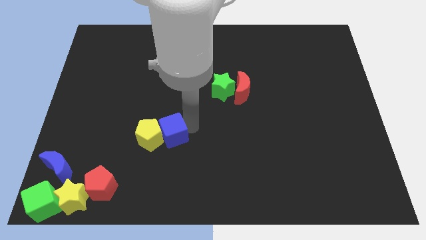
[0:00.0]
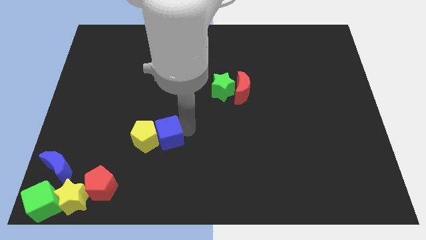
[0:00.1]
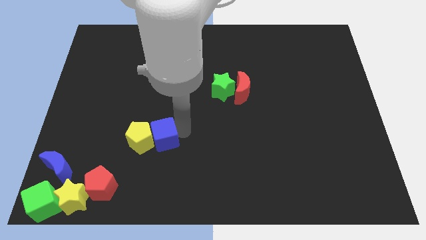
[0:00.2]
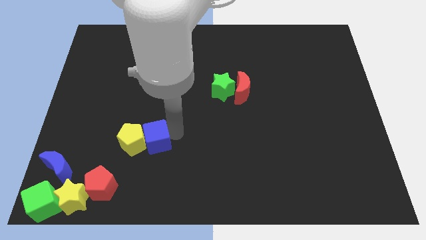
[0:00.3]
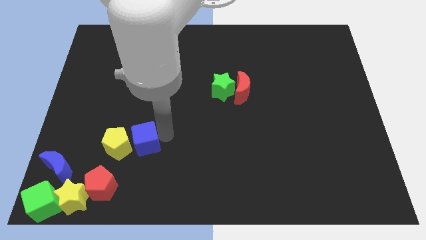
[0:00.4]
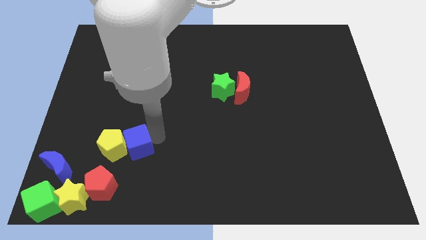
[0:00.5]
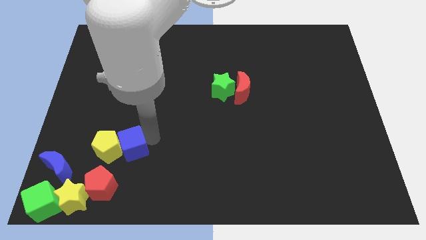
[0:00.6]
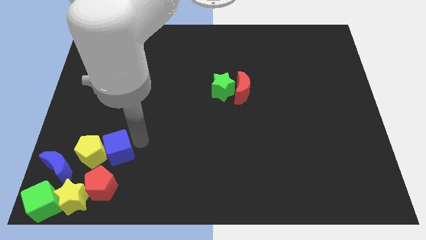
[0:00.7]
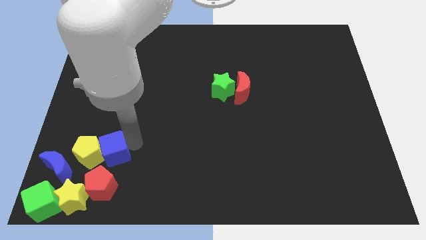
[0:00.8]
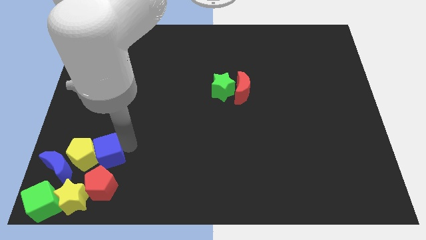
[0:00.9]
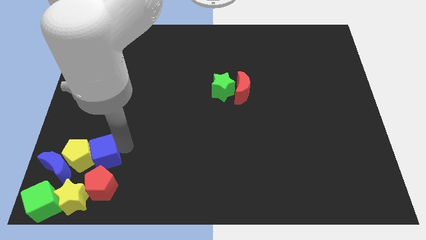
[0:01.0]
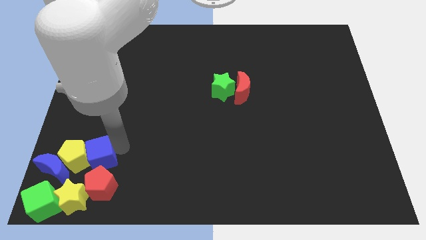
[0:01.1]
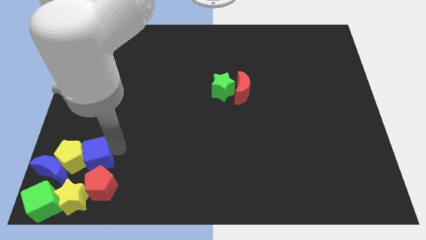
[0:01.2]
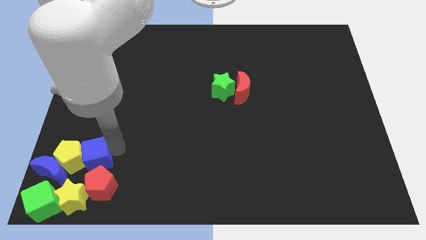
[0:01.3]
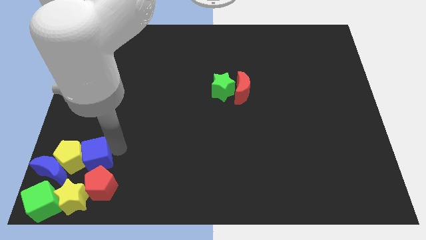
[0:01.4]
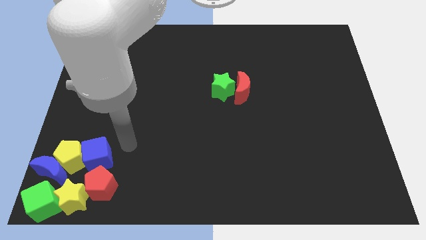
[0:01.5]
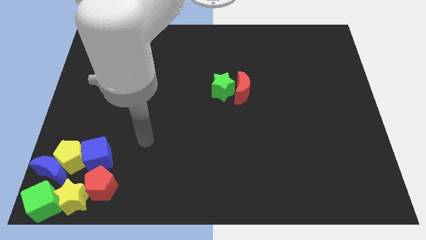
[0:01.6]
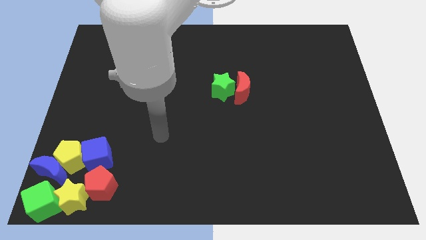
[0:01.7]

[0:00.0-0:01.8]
push both blue cube and yellow pentagon towards the bottom left corner

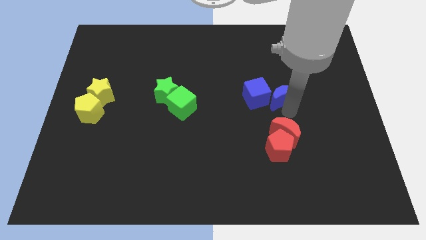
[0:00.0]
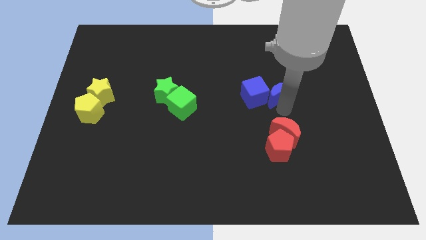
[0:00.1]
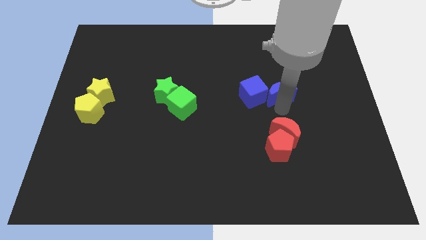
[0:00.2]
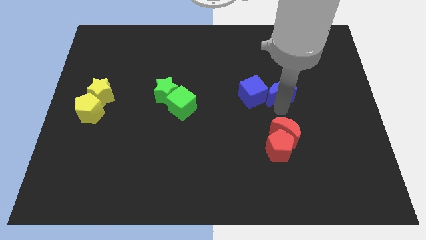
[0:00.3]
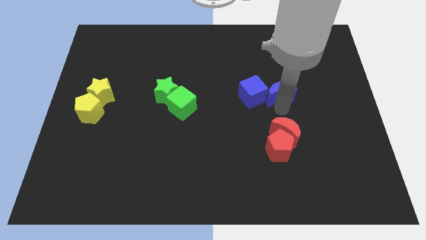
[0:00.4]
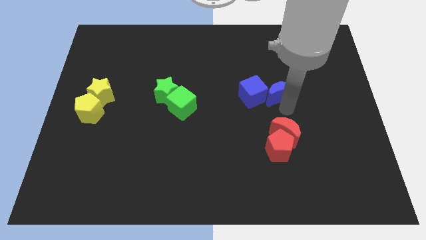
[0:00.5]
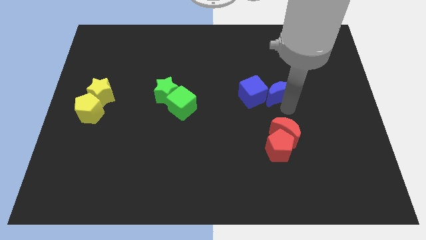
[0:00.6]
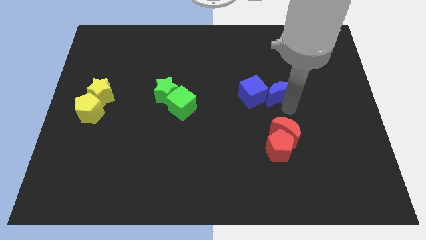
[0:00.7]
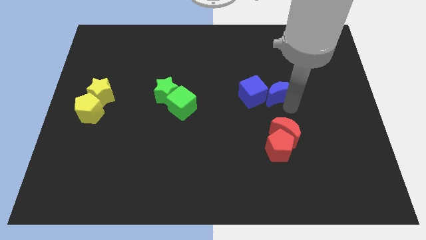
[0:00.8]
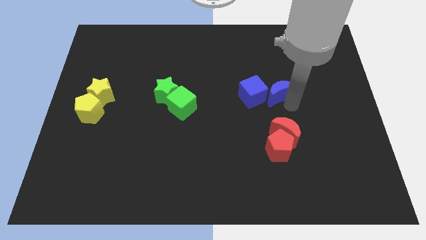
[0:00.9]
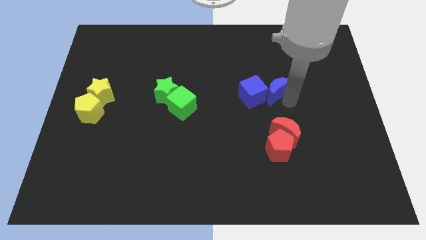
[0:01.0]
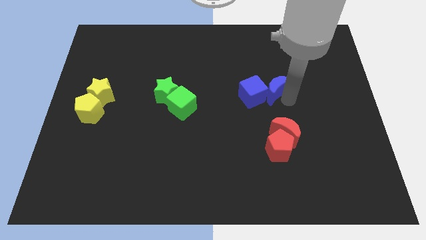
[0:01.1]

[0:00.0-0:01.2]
move the blue moon into the blue cube

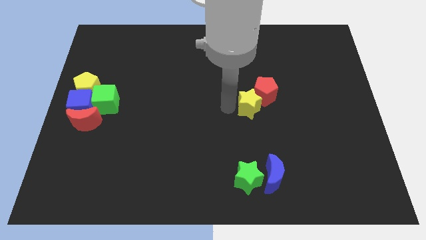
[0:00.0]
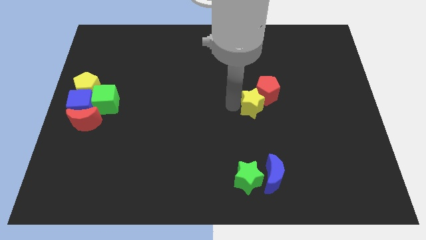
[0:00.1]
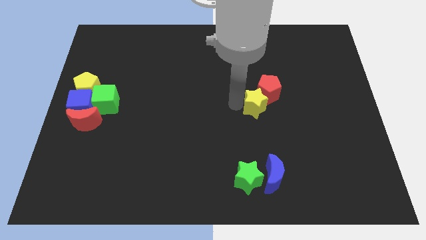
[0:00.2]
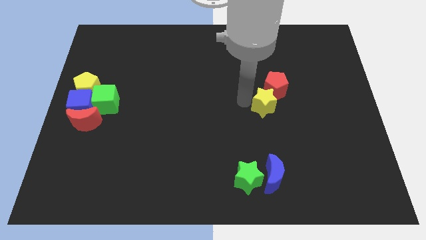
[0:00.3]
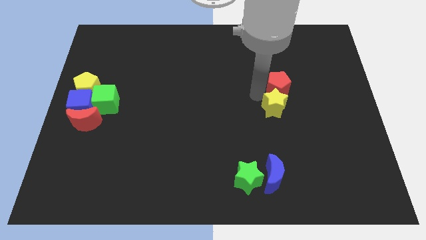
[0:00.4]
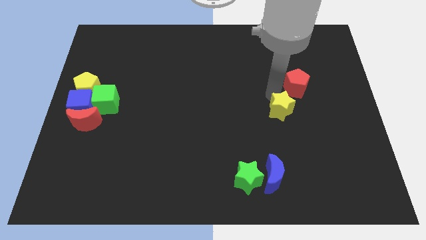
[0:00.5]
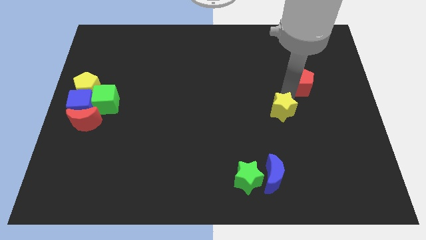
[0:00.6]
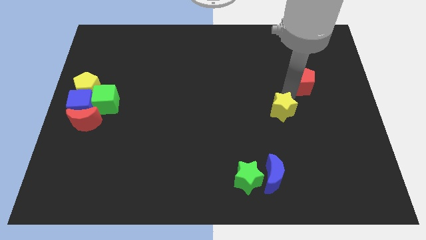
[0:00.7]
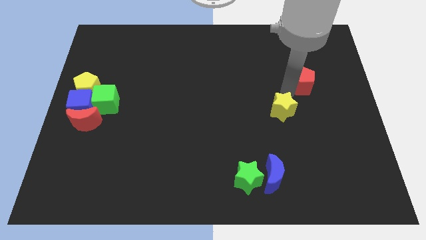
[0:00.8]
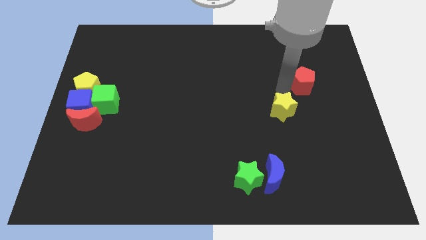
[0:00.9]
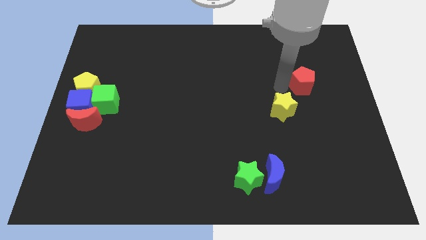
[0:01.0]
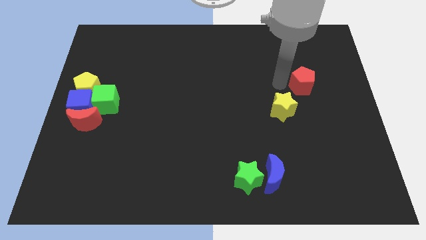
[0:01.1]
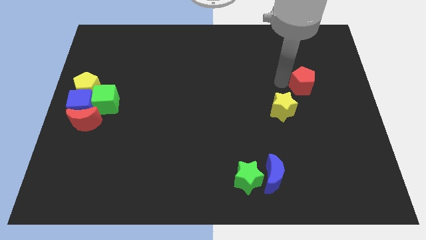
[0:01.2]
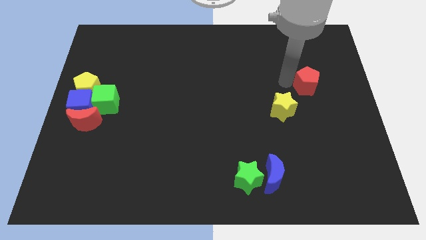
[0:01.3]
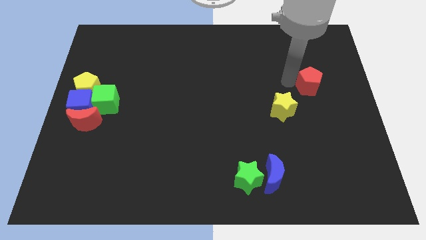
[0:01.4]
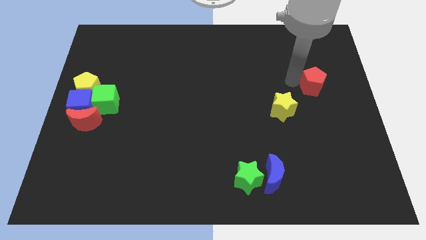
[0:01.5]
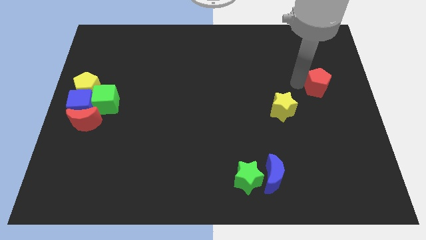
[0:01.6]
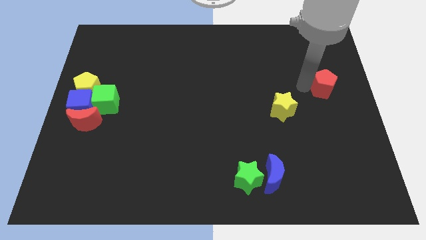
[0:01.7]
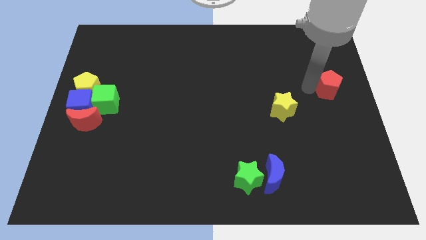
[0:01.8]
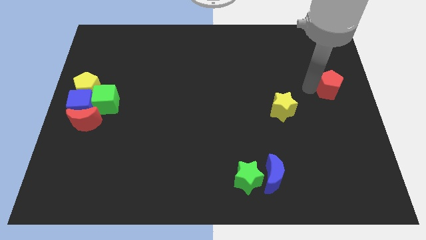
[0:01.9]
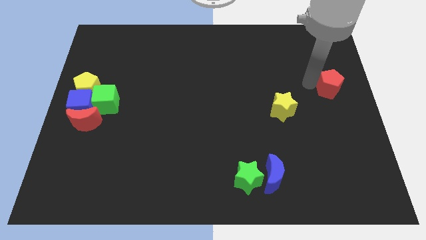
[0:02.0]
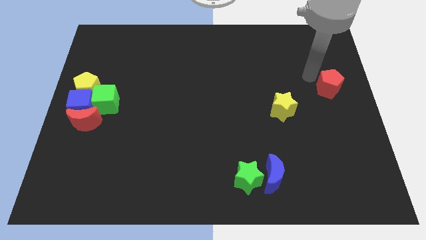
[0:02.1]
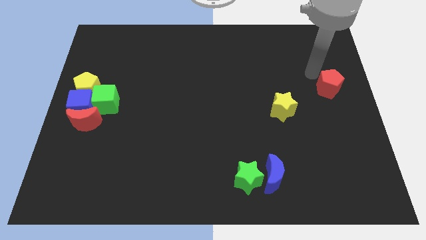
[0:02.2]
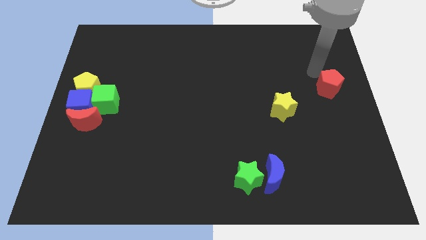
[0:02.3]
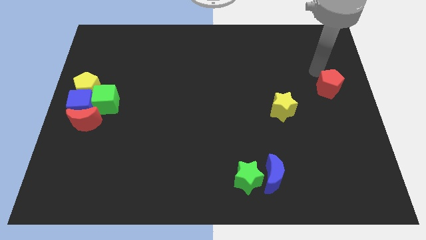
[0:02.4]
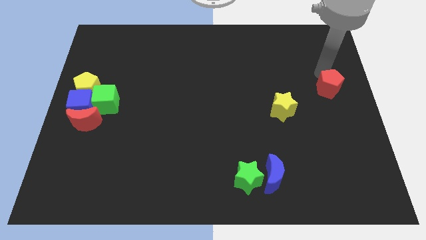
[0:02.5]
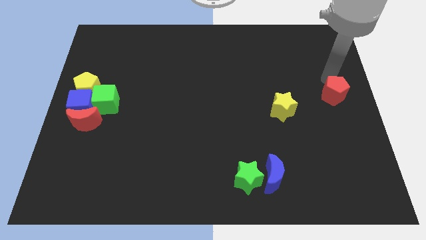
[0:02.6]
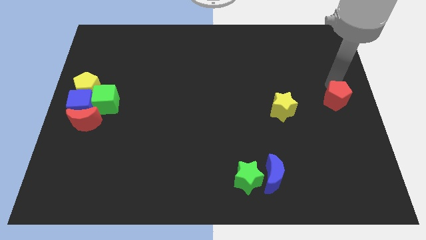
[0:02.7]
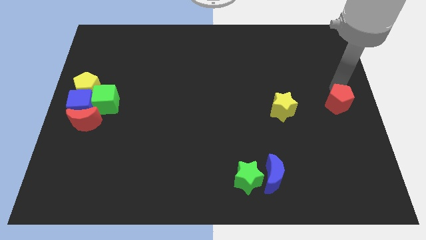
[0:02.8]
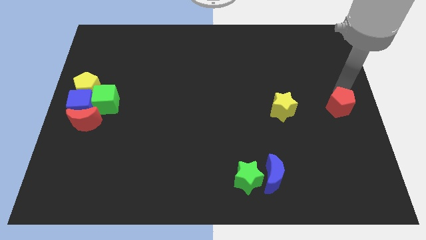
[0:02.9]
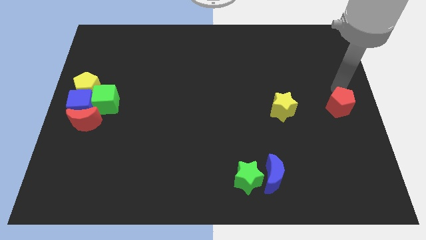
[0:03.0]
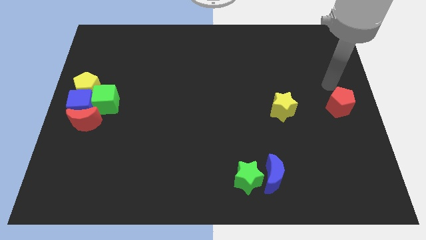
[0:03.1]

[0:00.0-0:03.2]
separate the red pentagon from the yellow staar

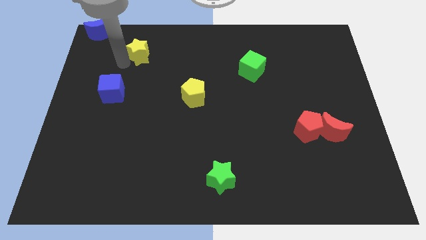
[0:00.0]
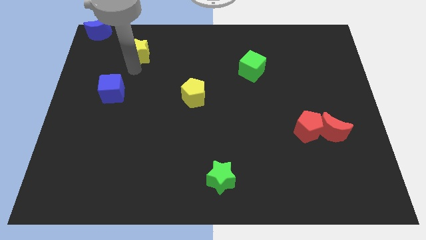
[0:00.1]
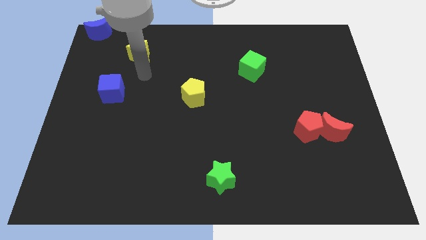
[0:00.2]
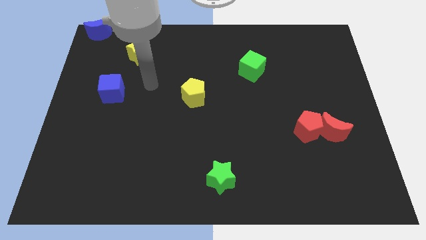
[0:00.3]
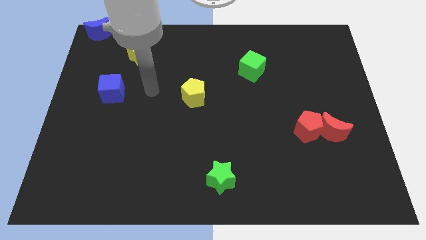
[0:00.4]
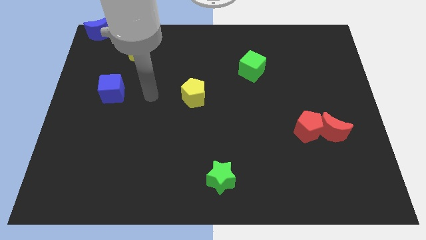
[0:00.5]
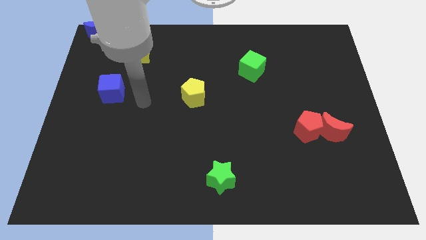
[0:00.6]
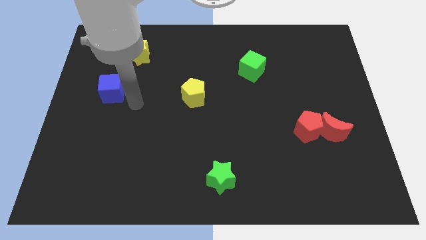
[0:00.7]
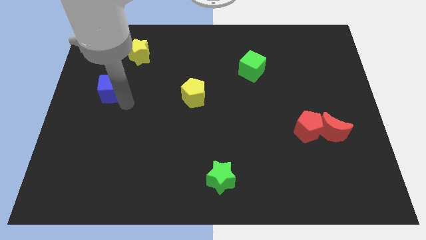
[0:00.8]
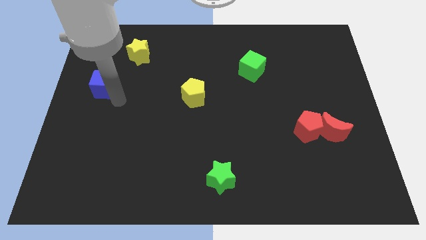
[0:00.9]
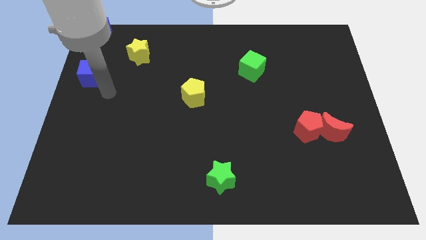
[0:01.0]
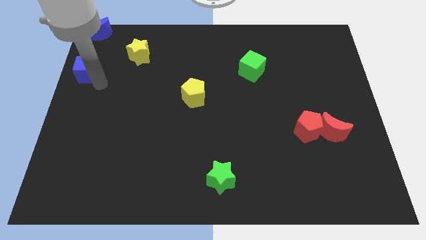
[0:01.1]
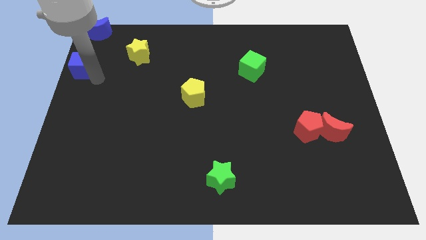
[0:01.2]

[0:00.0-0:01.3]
place the blue cube vertically at the bottom of the blue crescent

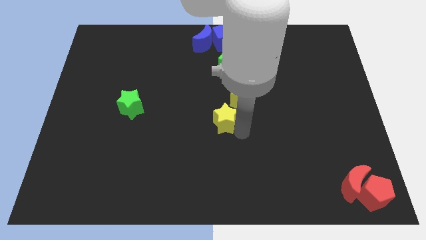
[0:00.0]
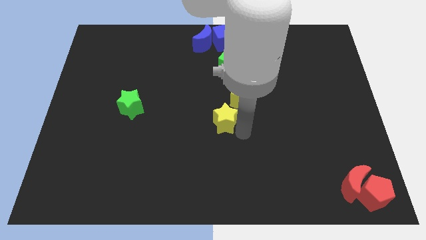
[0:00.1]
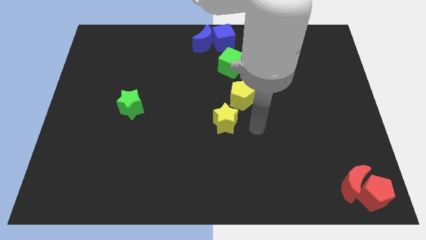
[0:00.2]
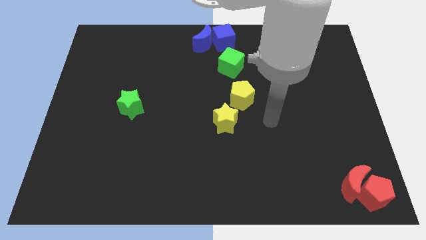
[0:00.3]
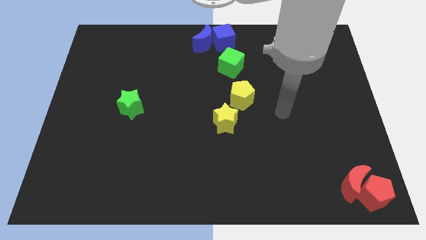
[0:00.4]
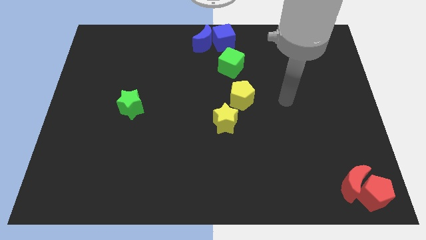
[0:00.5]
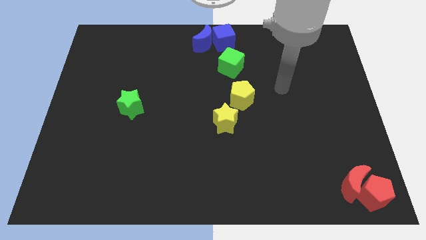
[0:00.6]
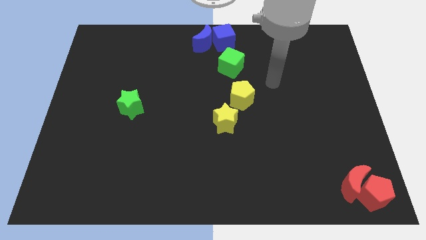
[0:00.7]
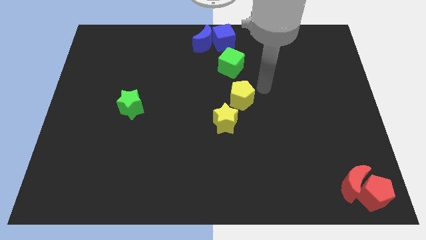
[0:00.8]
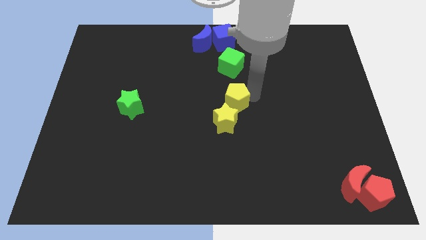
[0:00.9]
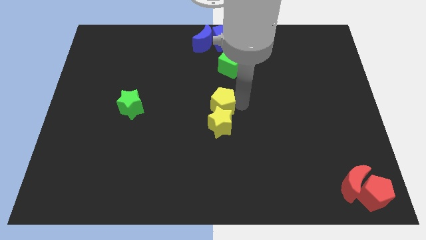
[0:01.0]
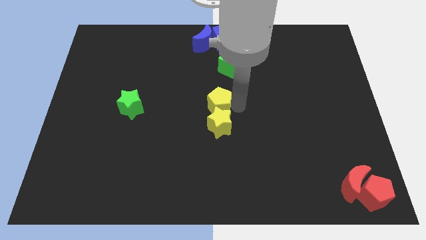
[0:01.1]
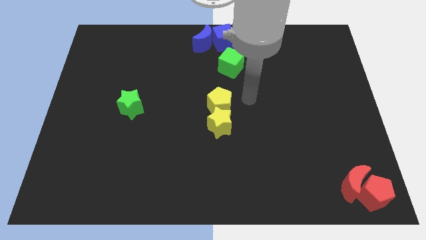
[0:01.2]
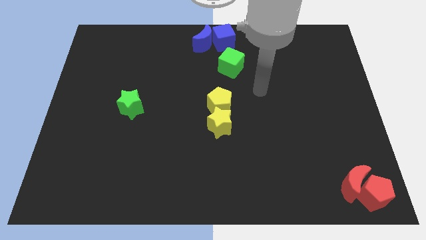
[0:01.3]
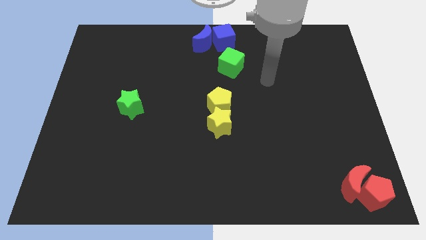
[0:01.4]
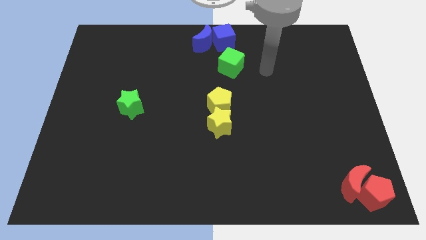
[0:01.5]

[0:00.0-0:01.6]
place the yellow pentagon at the top side of the yellow star
